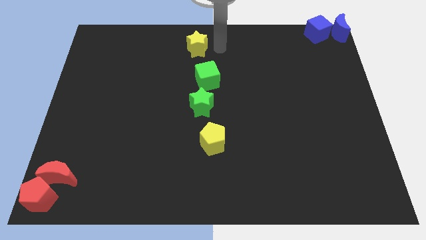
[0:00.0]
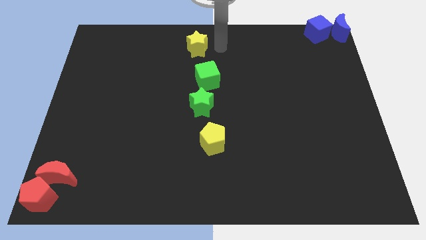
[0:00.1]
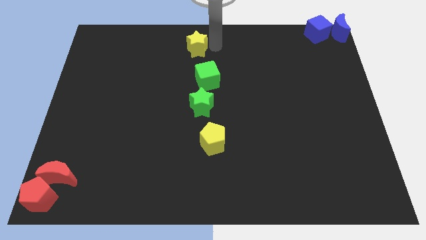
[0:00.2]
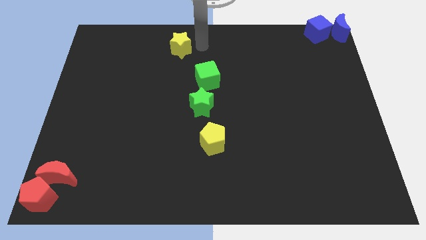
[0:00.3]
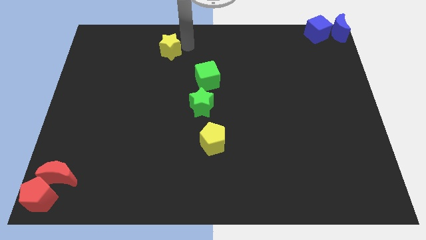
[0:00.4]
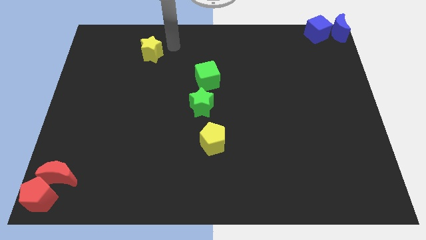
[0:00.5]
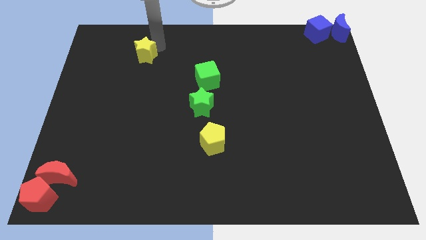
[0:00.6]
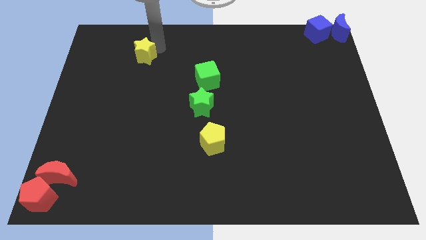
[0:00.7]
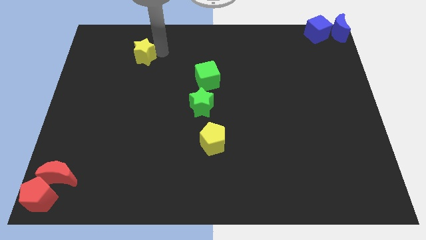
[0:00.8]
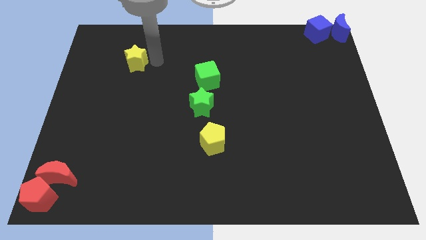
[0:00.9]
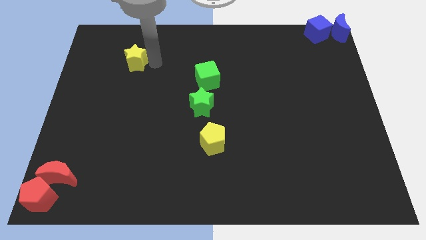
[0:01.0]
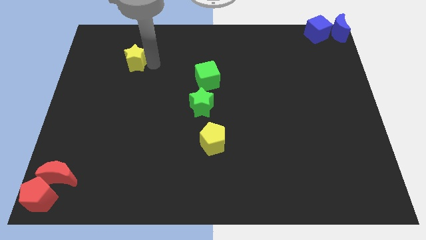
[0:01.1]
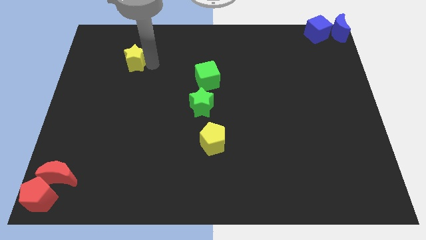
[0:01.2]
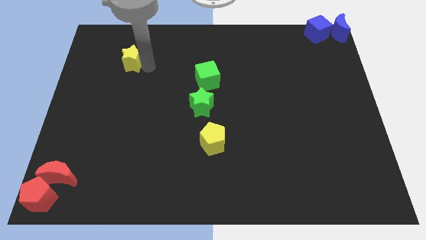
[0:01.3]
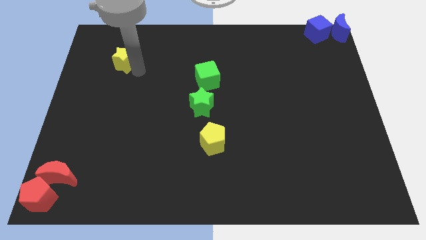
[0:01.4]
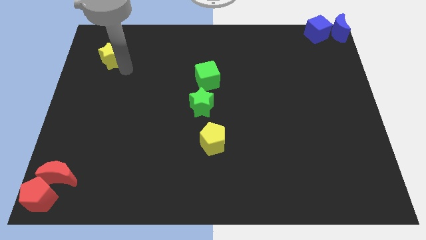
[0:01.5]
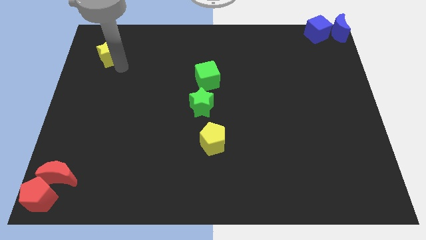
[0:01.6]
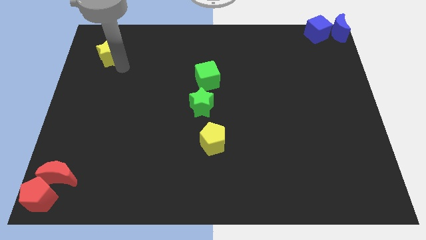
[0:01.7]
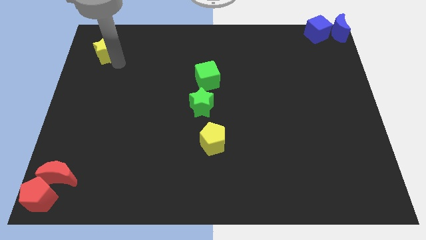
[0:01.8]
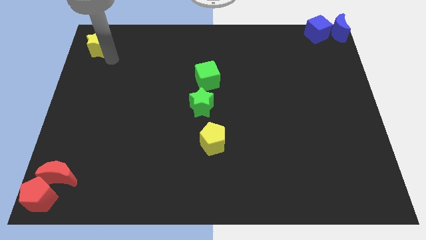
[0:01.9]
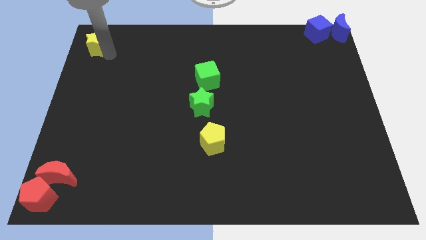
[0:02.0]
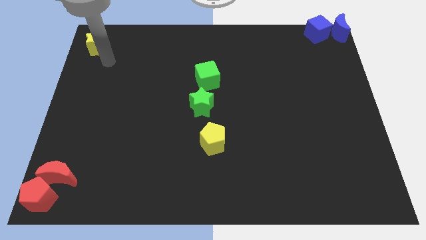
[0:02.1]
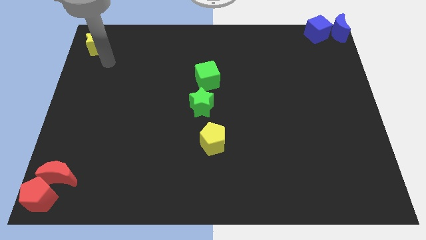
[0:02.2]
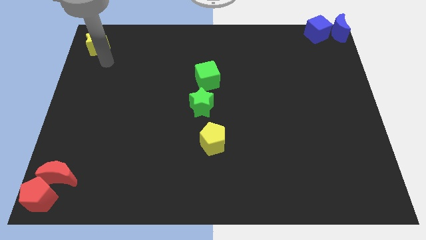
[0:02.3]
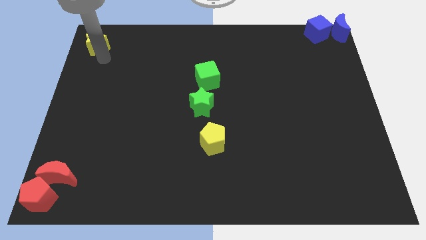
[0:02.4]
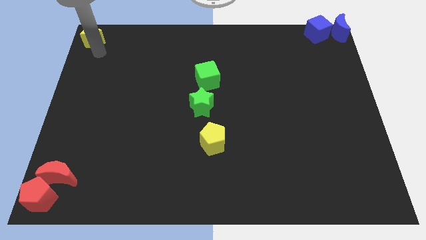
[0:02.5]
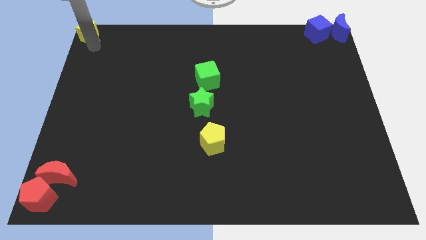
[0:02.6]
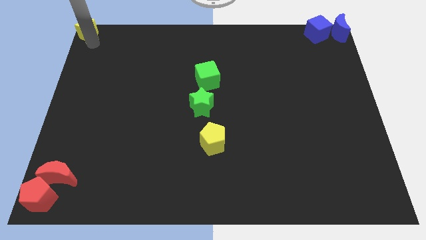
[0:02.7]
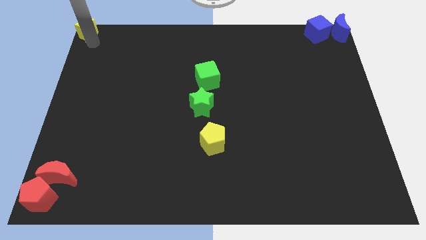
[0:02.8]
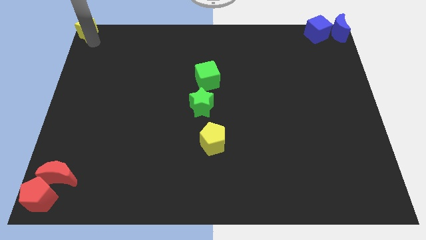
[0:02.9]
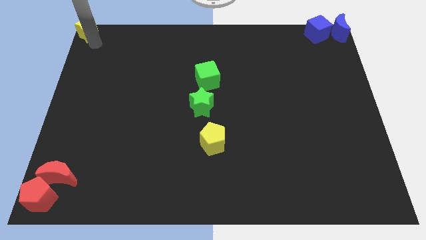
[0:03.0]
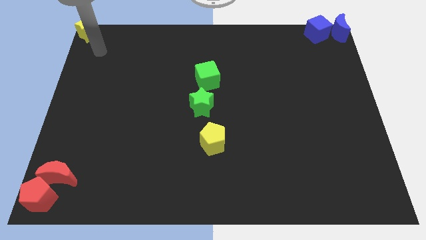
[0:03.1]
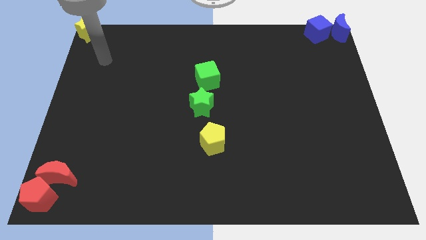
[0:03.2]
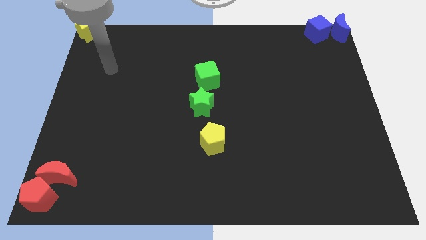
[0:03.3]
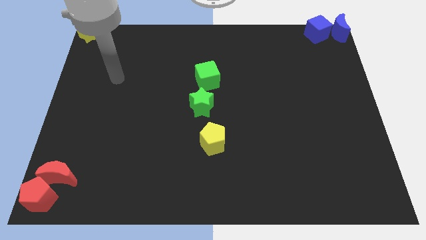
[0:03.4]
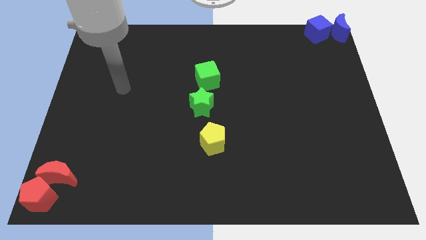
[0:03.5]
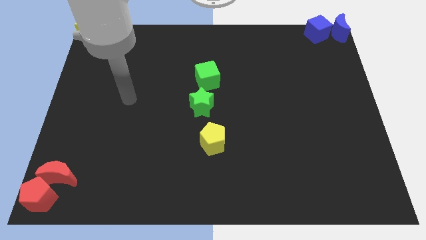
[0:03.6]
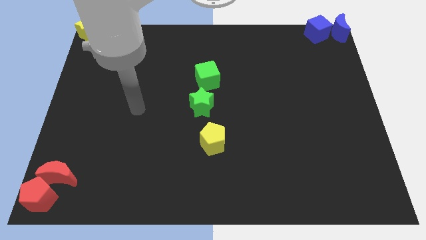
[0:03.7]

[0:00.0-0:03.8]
place the yellow star at the top left corner of the board

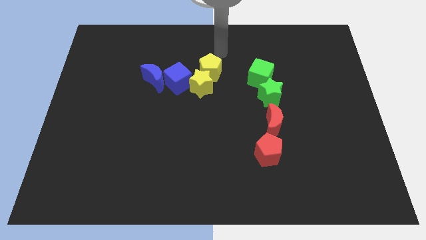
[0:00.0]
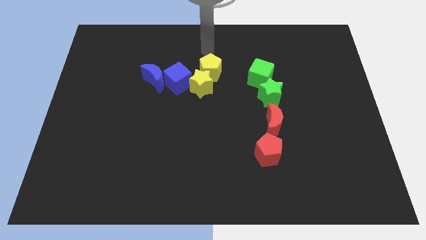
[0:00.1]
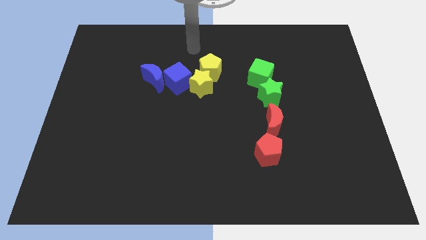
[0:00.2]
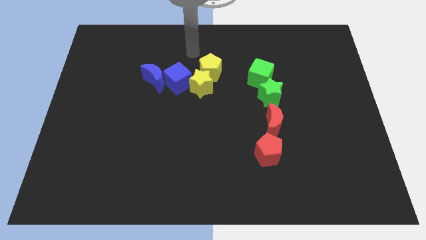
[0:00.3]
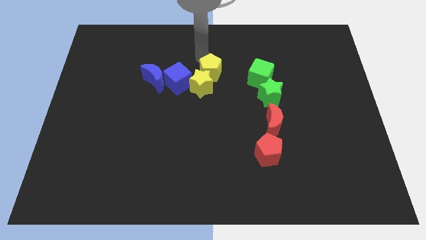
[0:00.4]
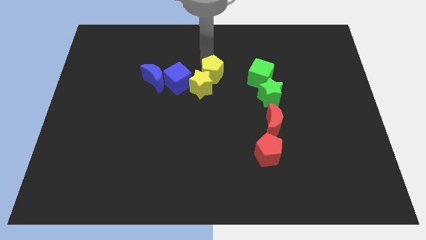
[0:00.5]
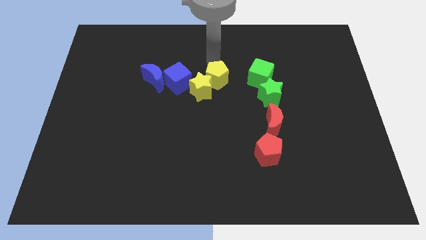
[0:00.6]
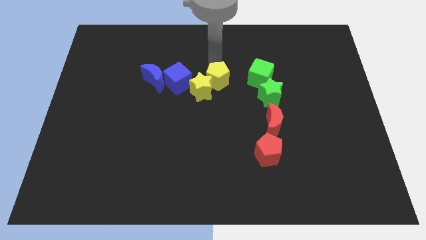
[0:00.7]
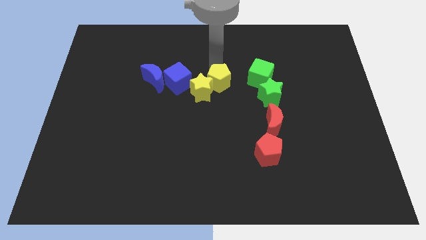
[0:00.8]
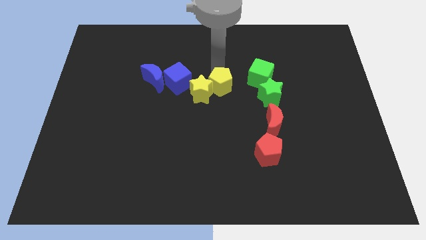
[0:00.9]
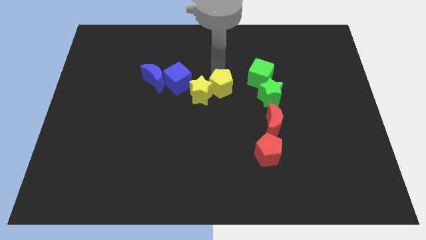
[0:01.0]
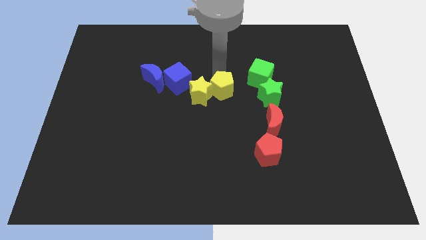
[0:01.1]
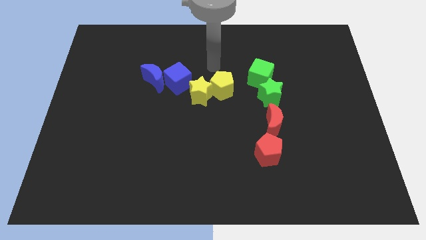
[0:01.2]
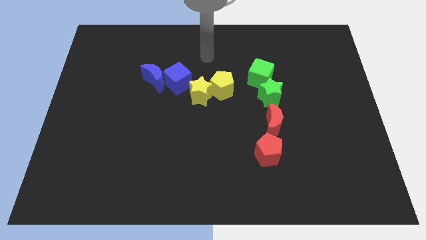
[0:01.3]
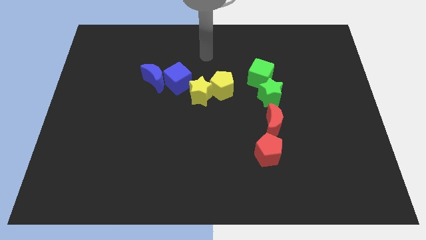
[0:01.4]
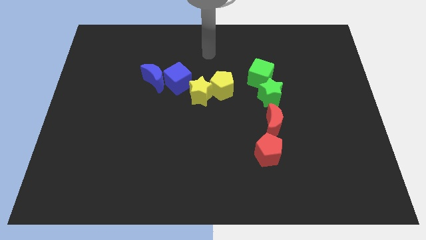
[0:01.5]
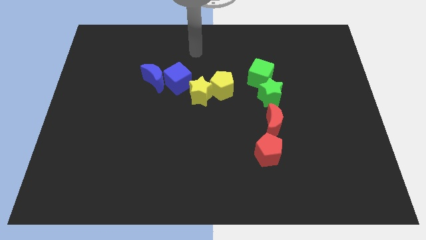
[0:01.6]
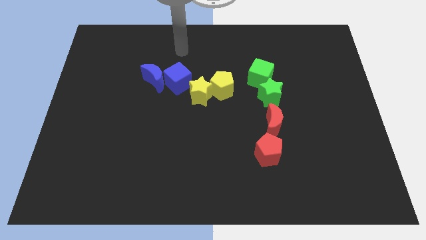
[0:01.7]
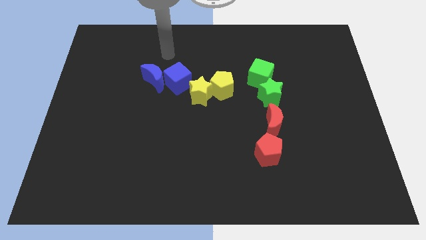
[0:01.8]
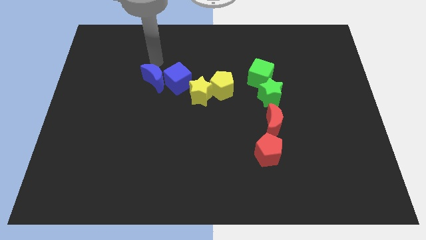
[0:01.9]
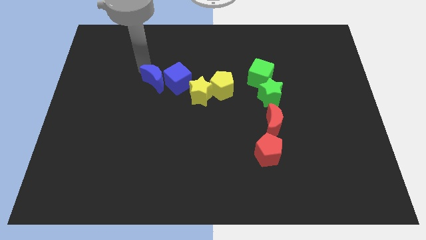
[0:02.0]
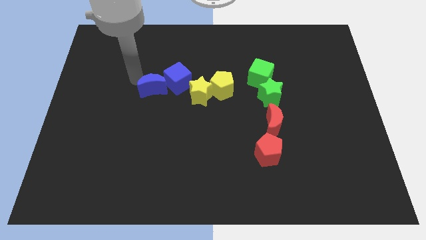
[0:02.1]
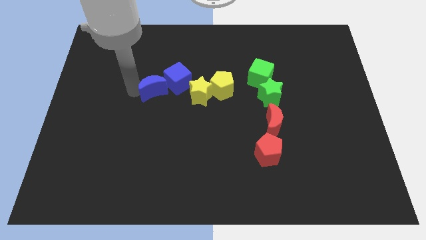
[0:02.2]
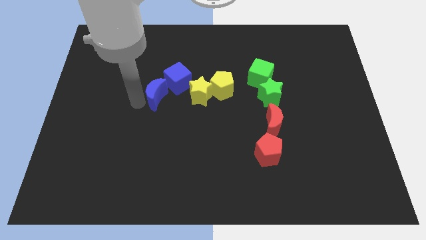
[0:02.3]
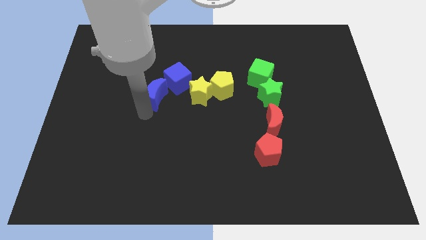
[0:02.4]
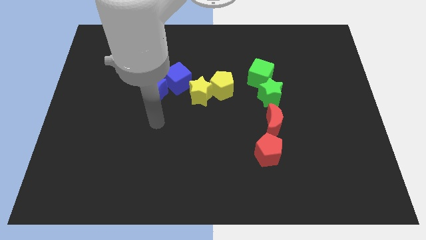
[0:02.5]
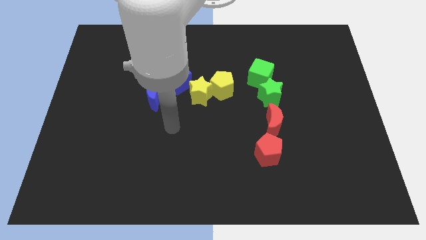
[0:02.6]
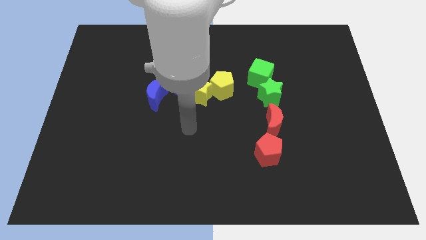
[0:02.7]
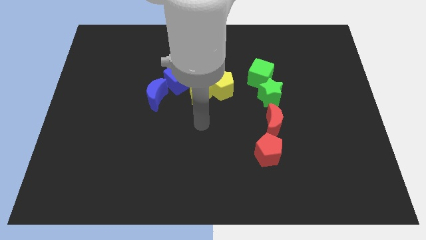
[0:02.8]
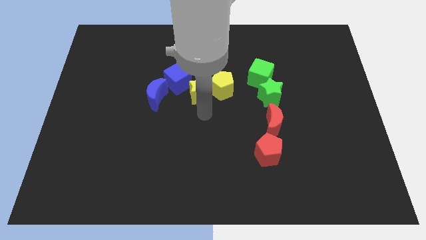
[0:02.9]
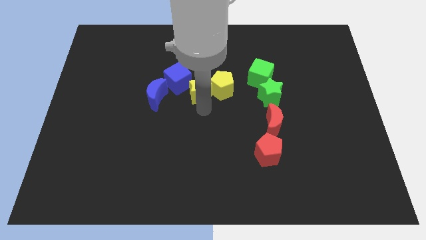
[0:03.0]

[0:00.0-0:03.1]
slide the yellow pentagon and blue moon slightly to the center

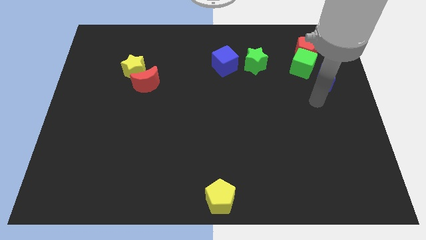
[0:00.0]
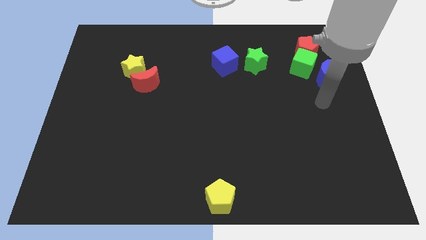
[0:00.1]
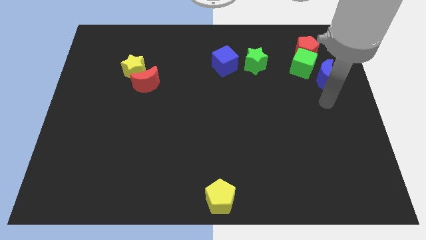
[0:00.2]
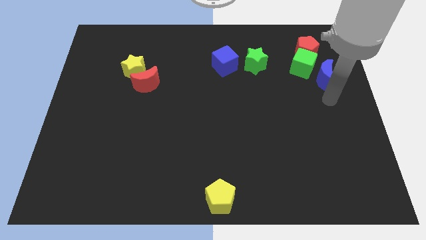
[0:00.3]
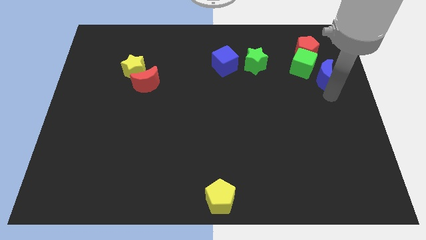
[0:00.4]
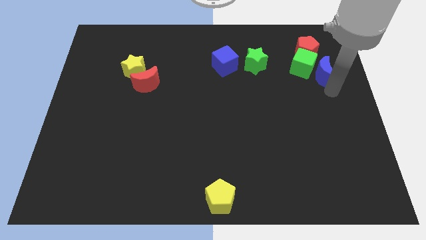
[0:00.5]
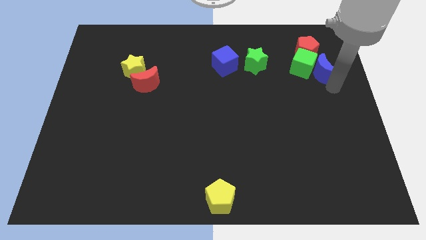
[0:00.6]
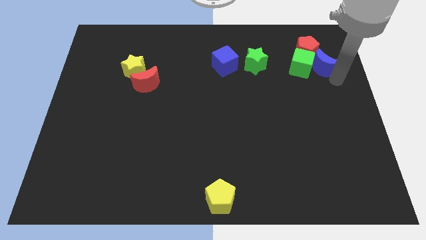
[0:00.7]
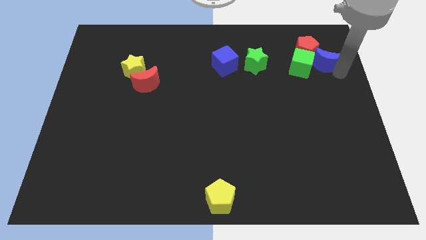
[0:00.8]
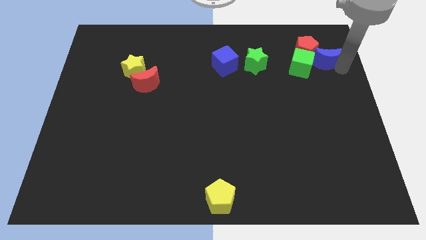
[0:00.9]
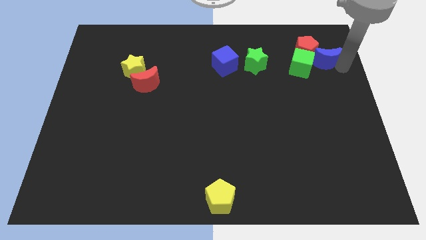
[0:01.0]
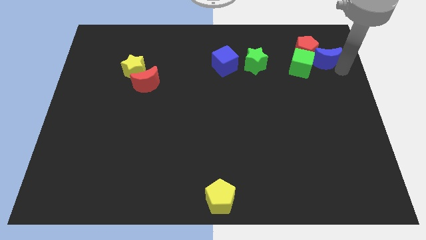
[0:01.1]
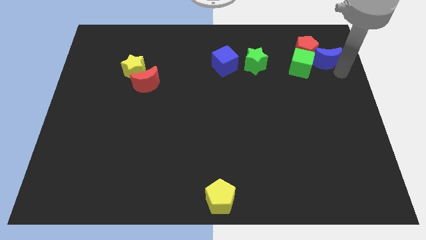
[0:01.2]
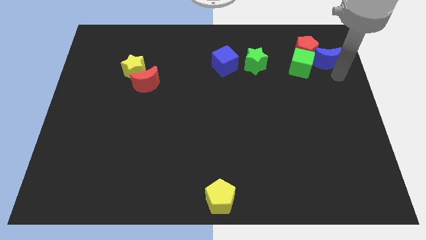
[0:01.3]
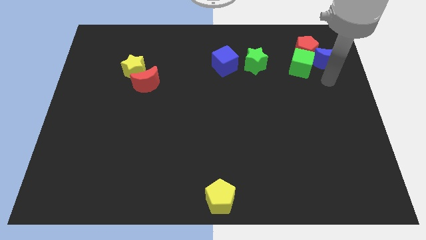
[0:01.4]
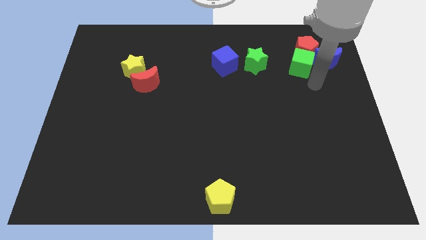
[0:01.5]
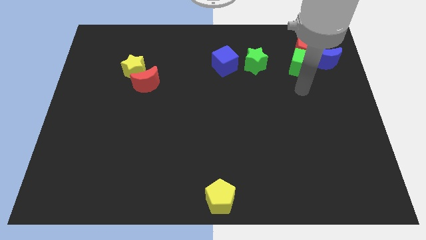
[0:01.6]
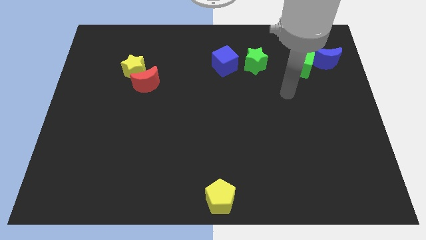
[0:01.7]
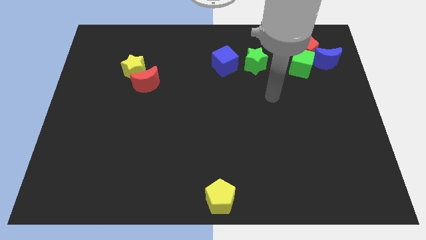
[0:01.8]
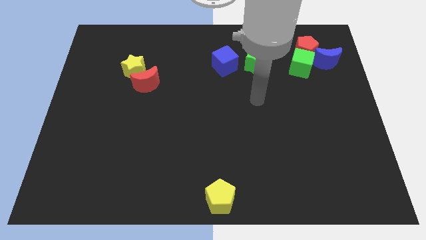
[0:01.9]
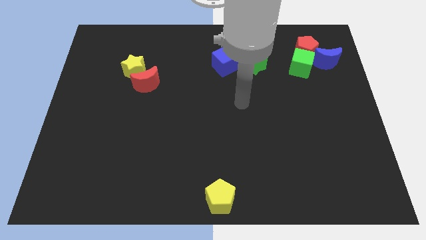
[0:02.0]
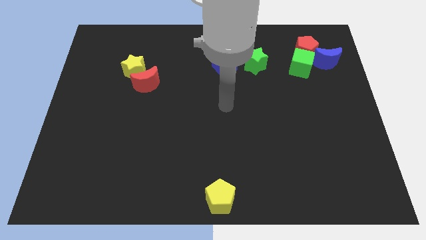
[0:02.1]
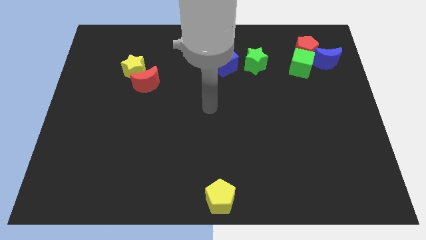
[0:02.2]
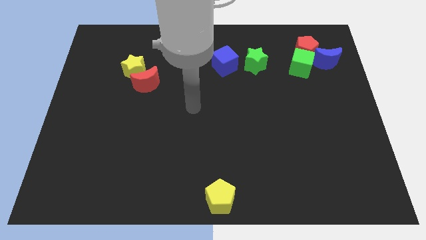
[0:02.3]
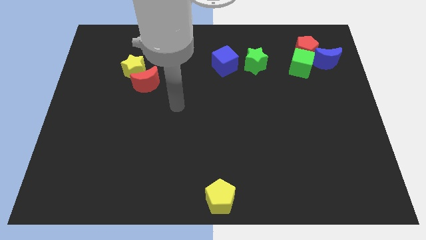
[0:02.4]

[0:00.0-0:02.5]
push blue moon to the right of red pentagon
